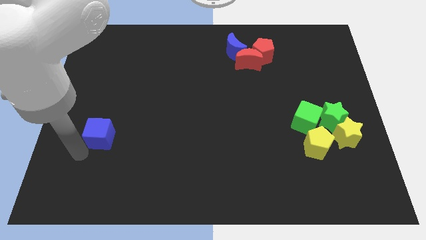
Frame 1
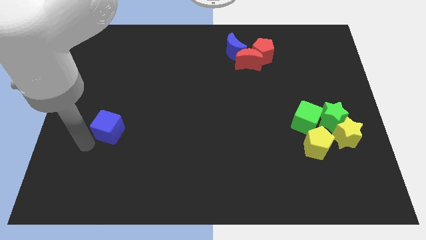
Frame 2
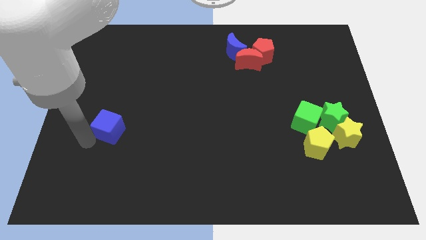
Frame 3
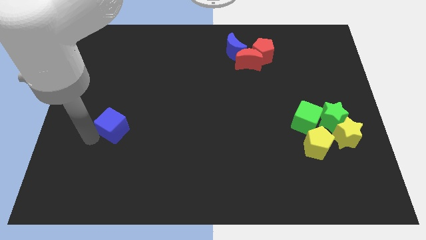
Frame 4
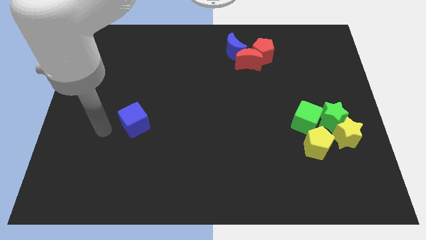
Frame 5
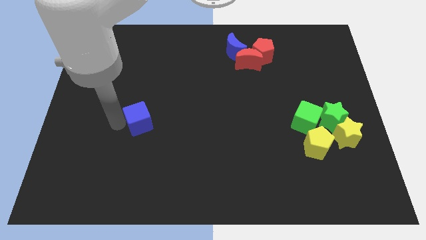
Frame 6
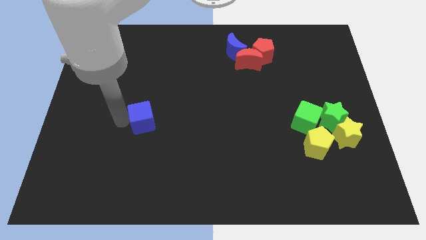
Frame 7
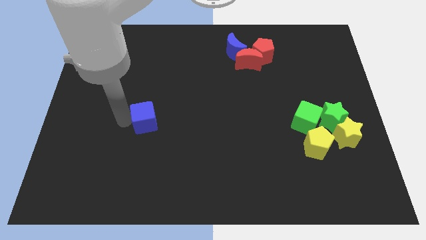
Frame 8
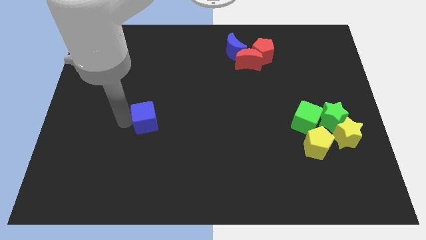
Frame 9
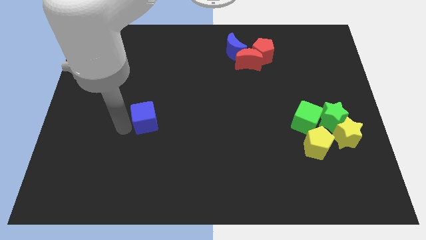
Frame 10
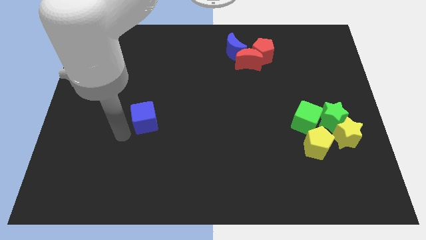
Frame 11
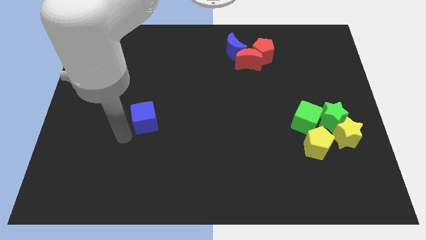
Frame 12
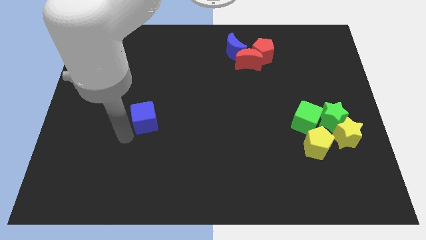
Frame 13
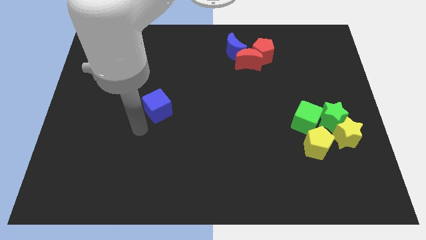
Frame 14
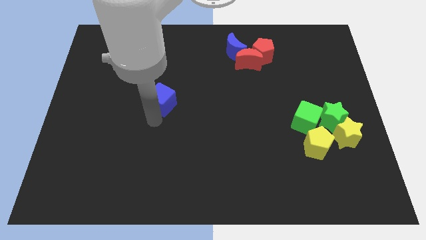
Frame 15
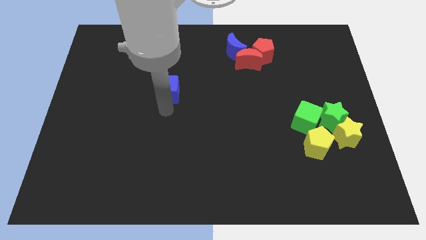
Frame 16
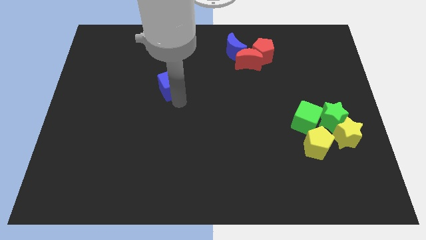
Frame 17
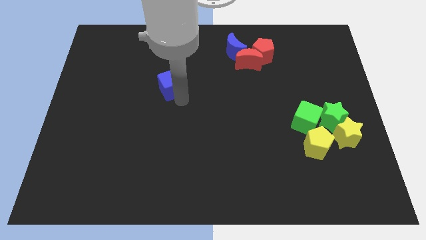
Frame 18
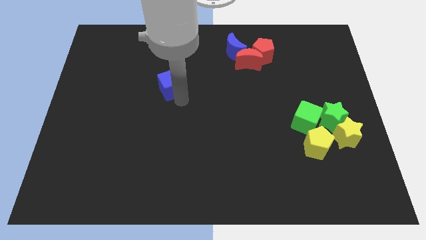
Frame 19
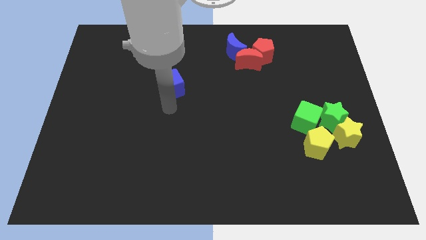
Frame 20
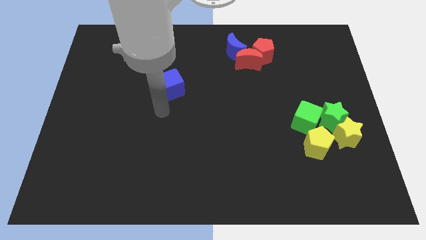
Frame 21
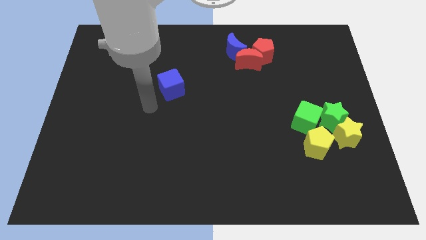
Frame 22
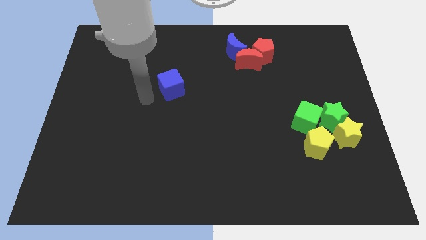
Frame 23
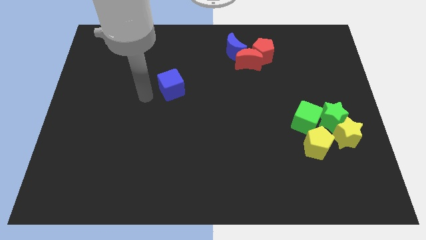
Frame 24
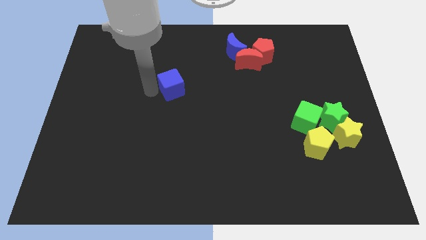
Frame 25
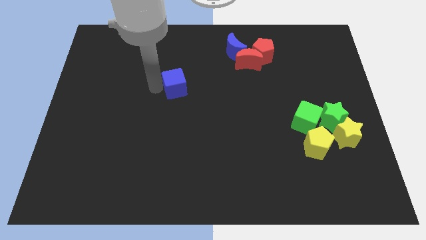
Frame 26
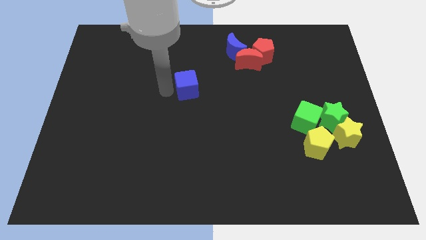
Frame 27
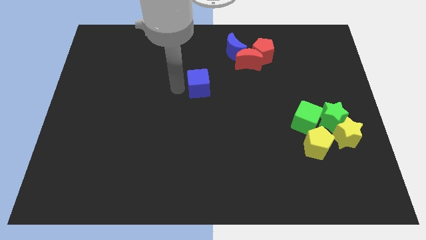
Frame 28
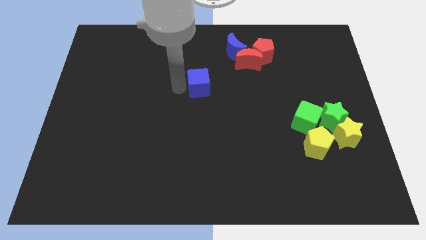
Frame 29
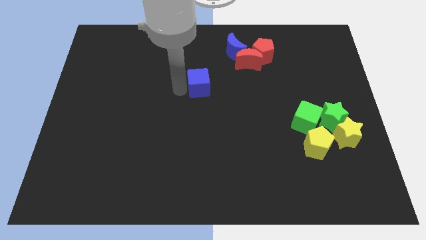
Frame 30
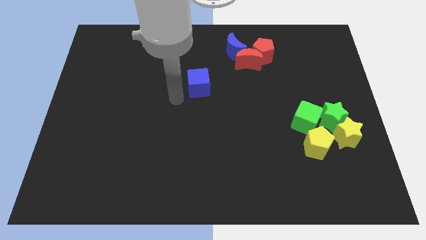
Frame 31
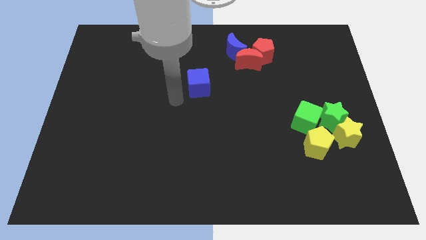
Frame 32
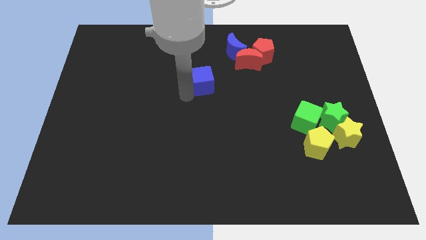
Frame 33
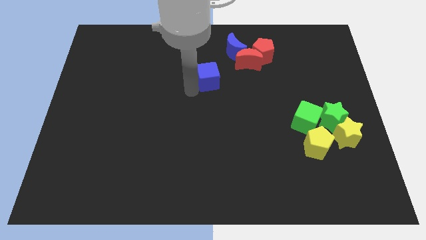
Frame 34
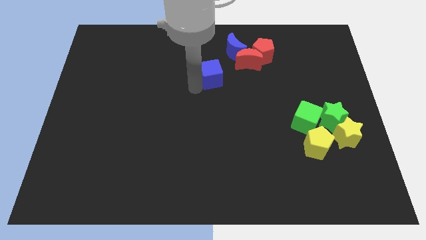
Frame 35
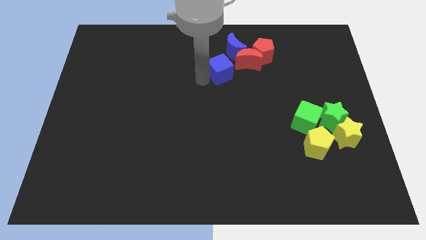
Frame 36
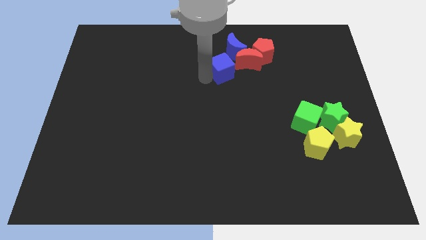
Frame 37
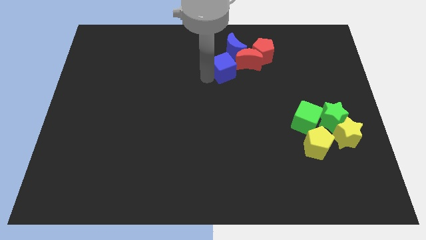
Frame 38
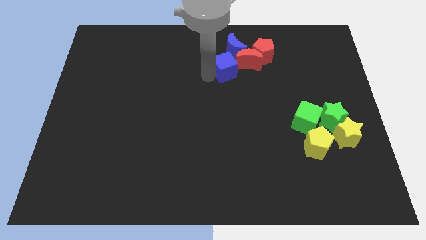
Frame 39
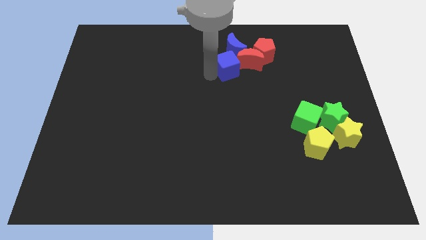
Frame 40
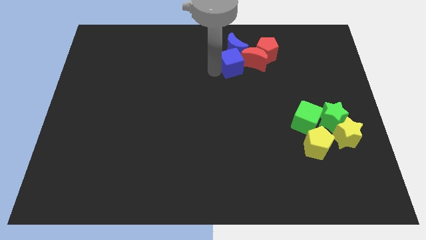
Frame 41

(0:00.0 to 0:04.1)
push the blue cube into the red crescent

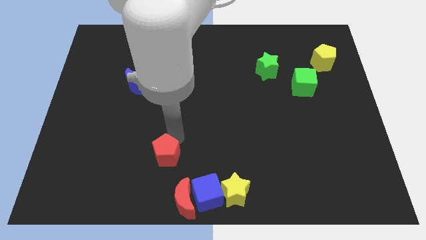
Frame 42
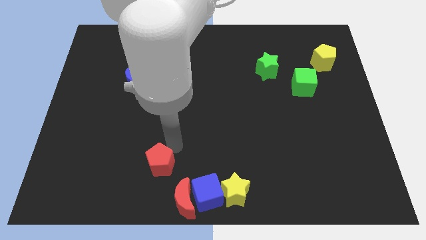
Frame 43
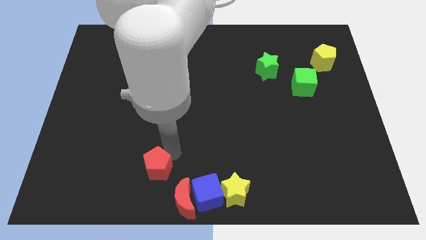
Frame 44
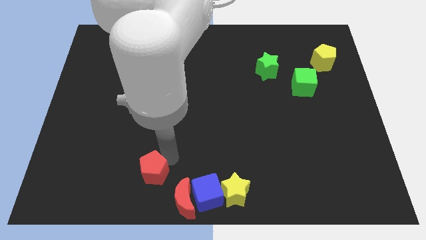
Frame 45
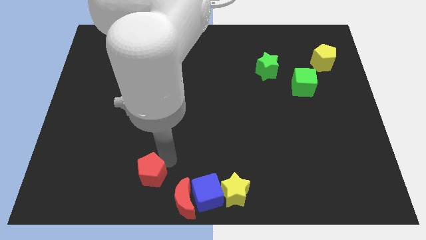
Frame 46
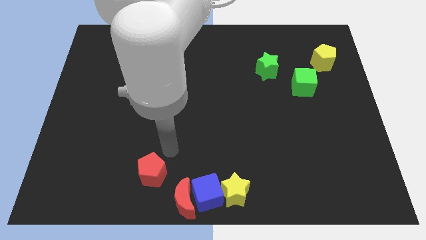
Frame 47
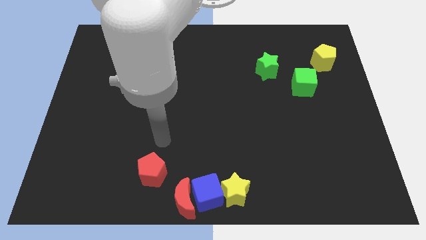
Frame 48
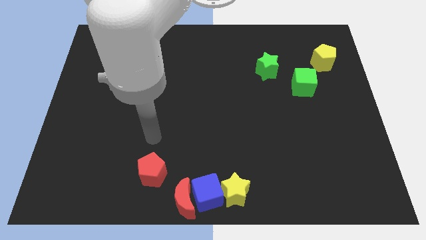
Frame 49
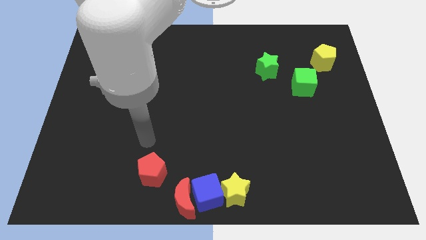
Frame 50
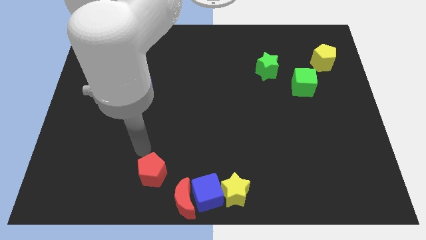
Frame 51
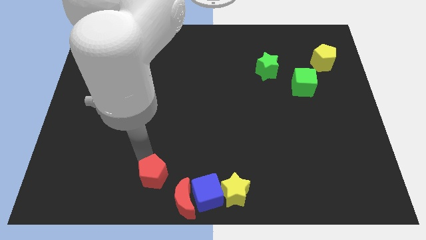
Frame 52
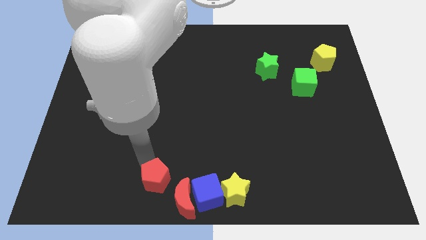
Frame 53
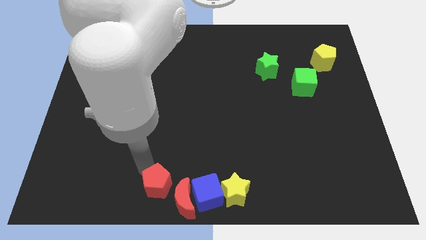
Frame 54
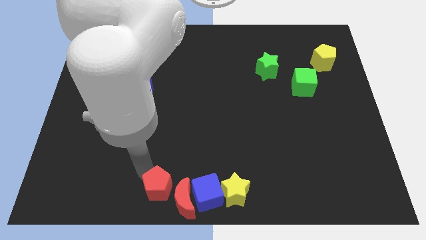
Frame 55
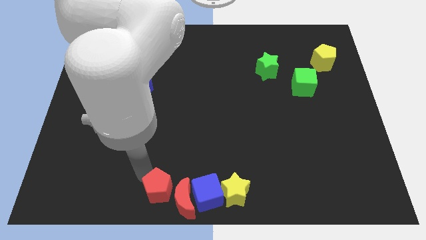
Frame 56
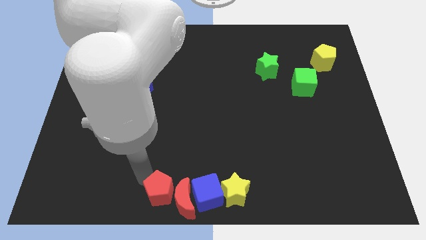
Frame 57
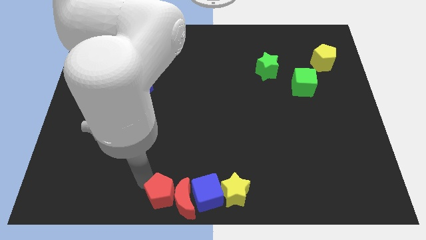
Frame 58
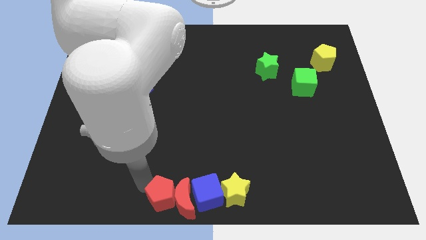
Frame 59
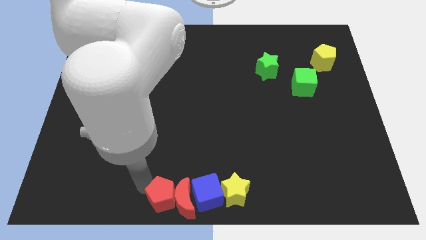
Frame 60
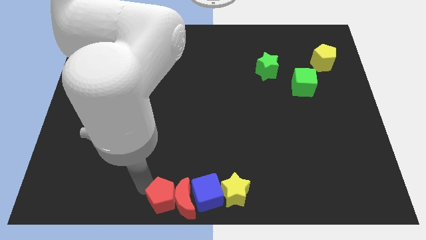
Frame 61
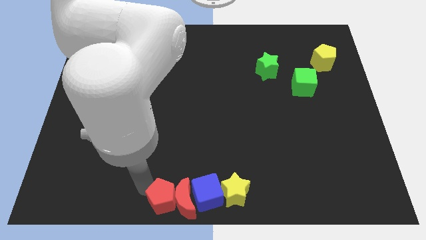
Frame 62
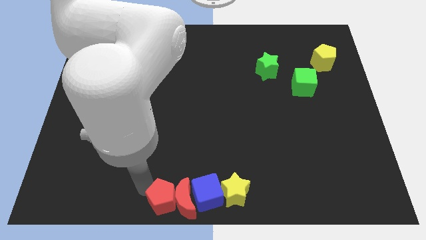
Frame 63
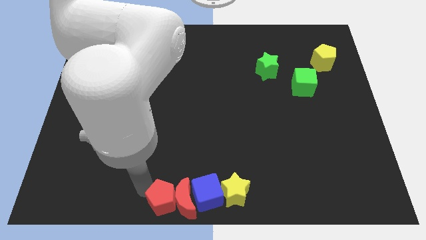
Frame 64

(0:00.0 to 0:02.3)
place red pentagon at the left of the red half moon

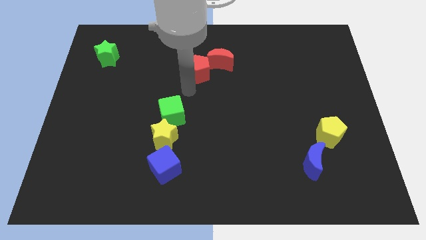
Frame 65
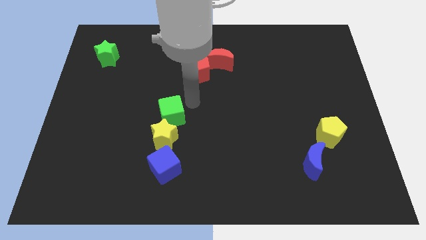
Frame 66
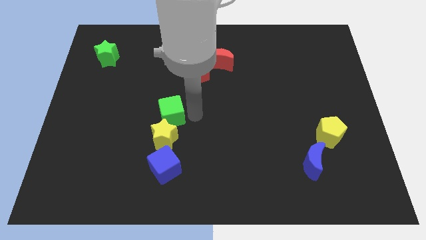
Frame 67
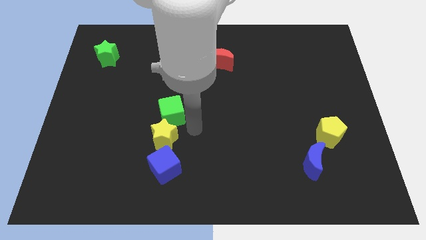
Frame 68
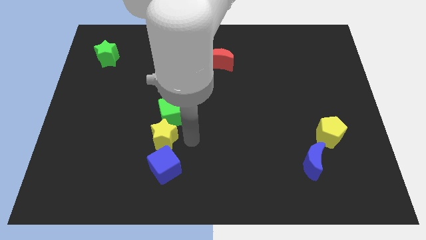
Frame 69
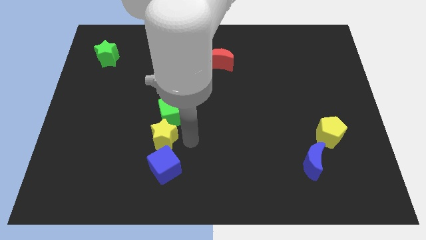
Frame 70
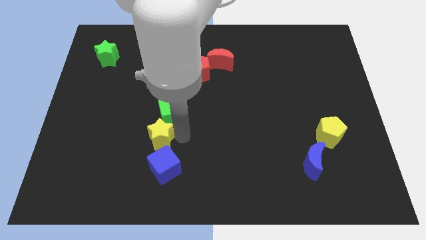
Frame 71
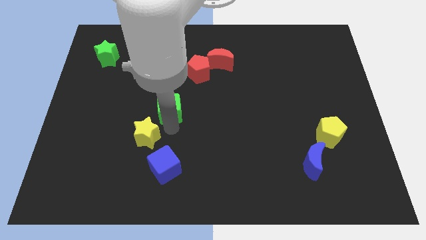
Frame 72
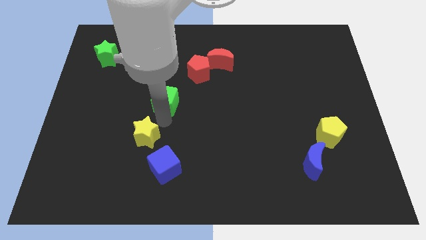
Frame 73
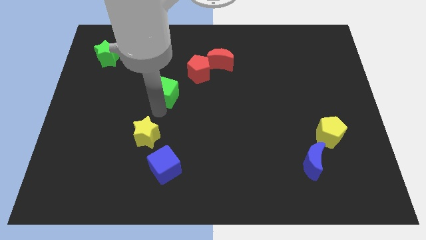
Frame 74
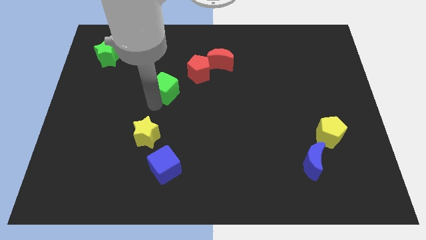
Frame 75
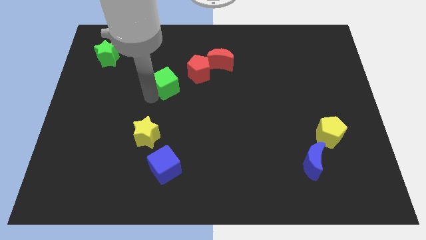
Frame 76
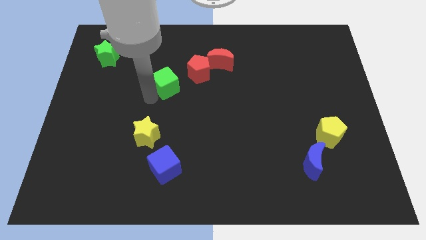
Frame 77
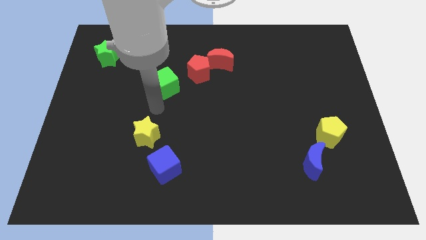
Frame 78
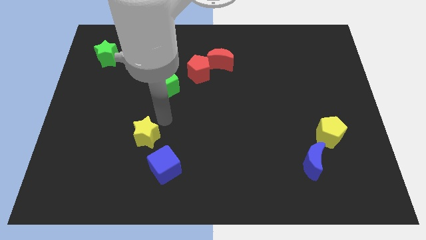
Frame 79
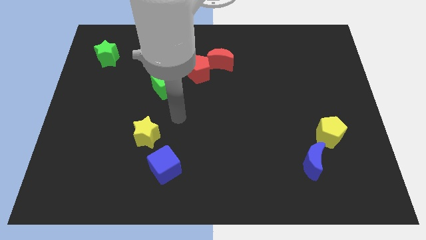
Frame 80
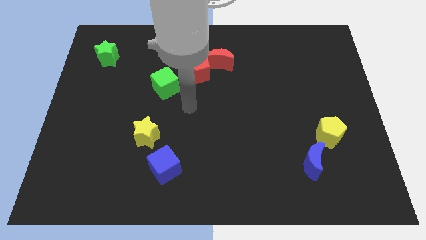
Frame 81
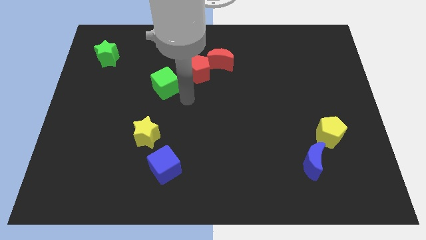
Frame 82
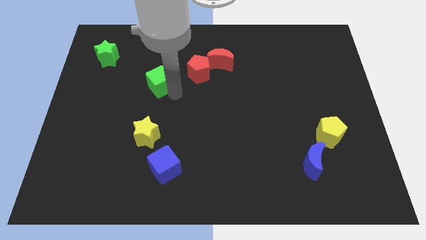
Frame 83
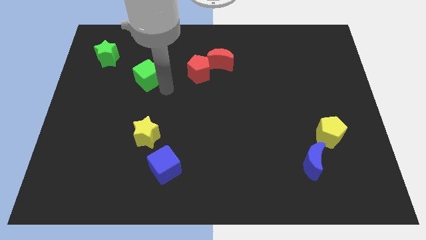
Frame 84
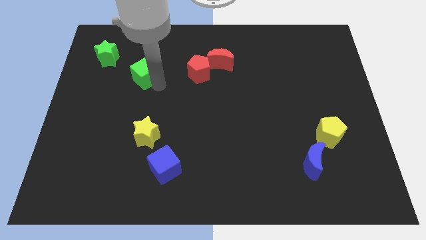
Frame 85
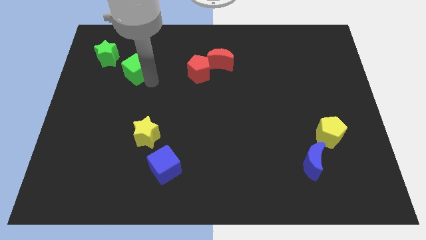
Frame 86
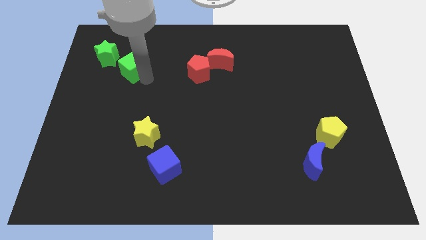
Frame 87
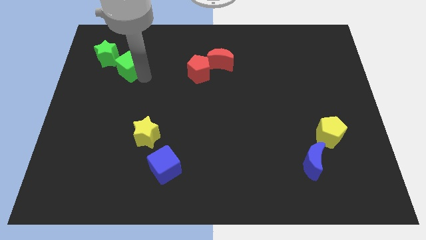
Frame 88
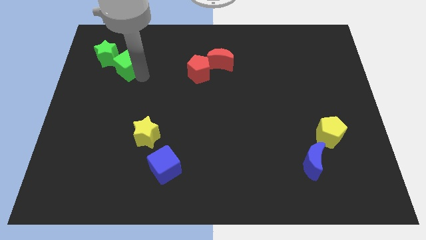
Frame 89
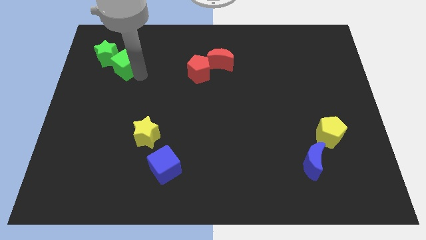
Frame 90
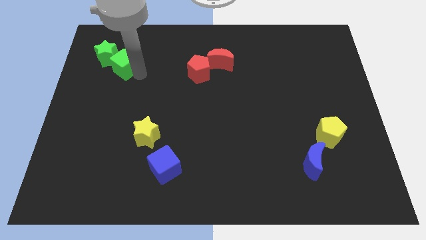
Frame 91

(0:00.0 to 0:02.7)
separate the green cube from the yellow star and blue cube
